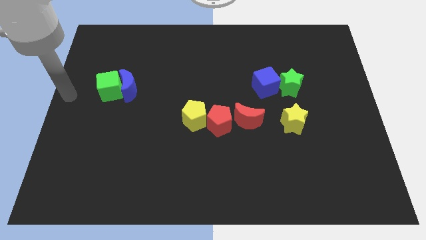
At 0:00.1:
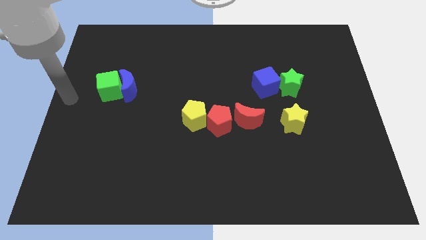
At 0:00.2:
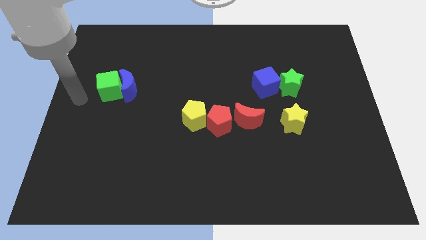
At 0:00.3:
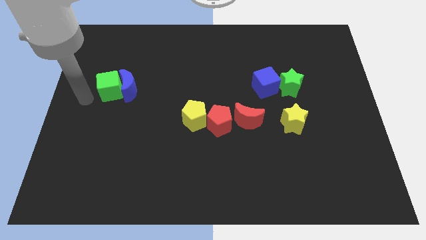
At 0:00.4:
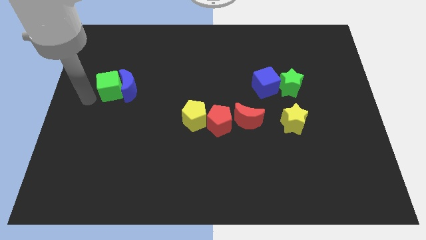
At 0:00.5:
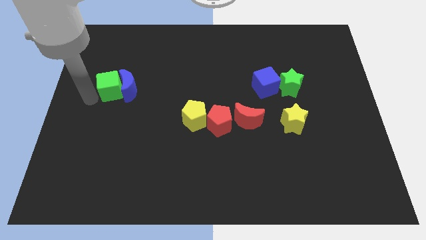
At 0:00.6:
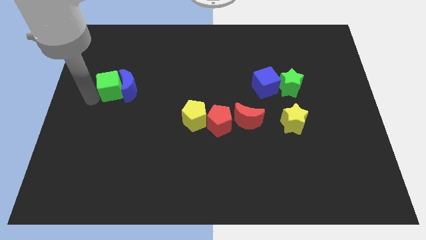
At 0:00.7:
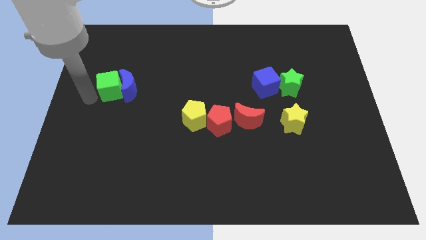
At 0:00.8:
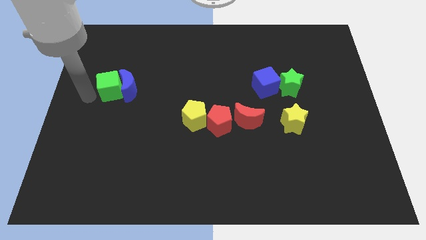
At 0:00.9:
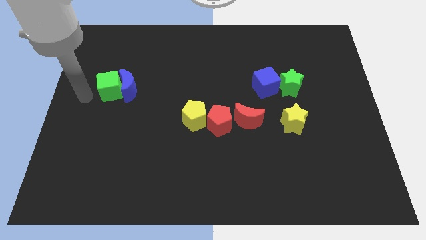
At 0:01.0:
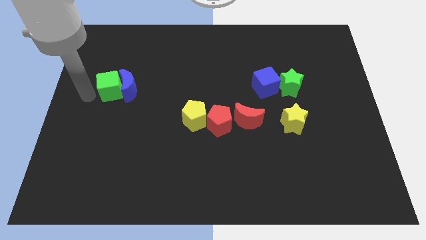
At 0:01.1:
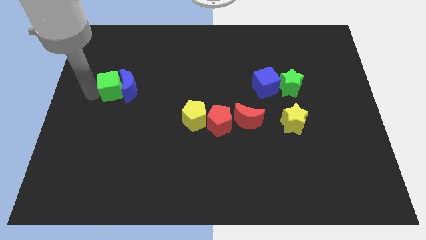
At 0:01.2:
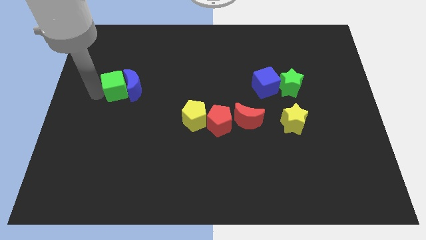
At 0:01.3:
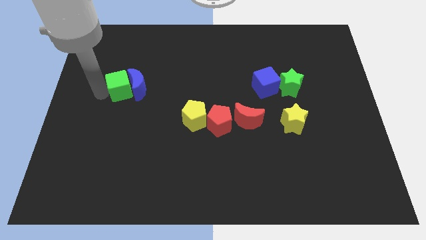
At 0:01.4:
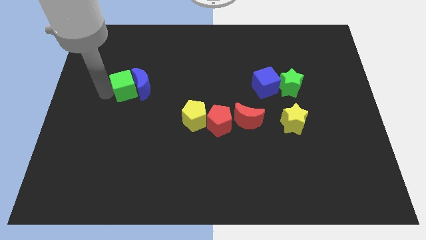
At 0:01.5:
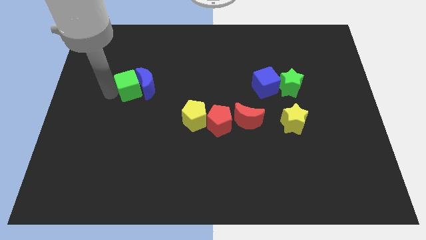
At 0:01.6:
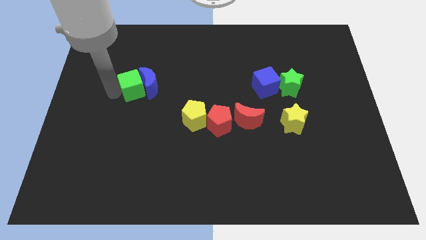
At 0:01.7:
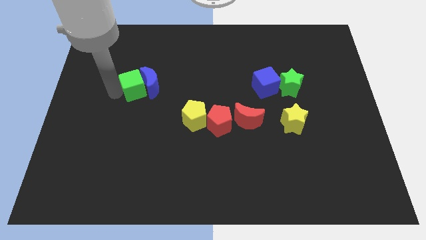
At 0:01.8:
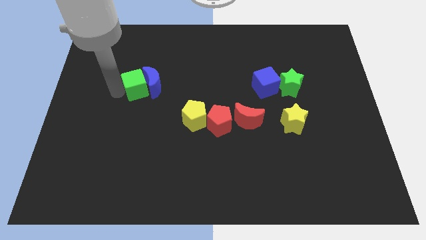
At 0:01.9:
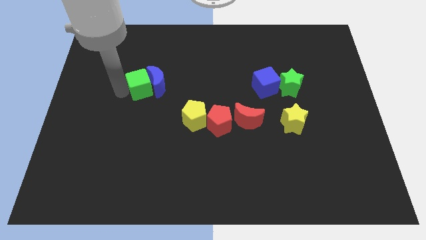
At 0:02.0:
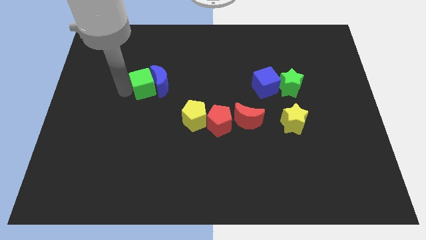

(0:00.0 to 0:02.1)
move the green cube and blue moon towards the right

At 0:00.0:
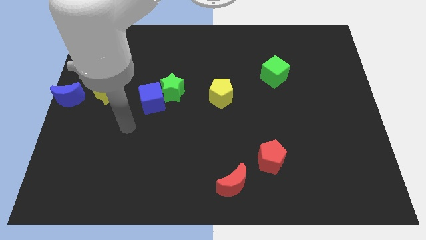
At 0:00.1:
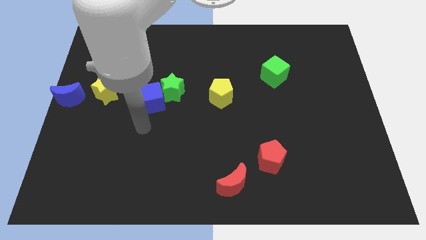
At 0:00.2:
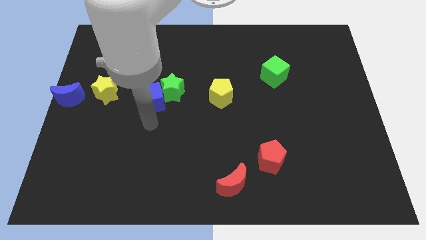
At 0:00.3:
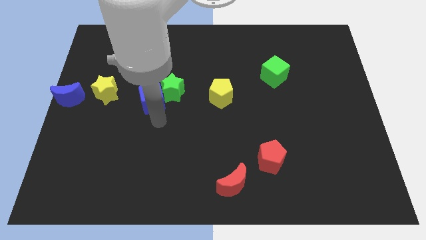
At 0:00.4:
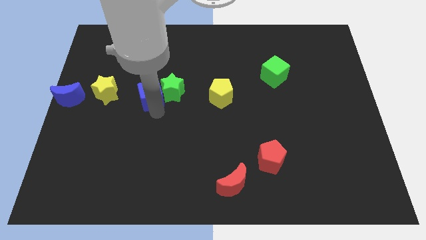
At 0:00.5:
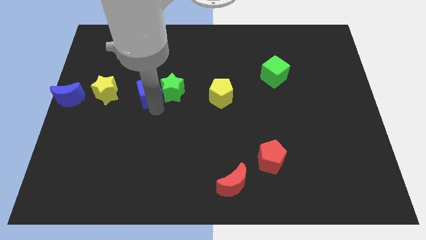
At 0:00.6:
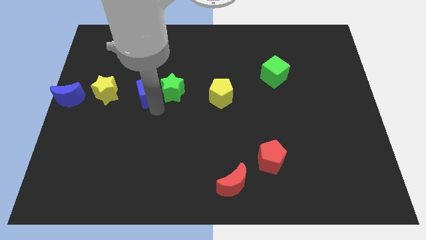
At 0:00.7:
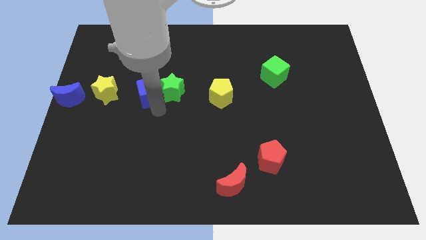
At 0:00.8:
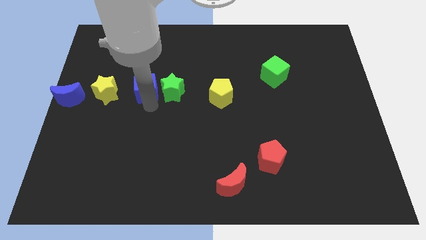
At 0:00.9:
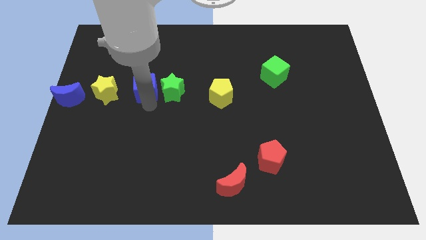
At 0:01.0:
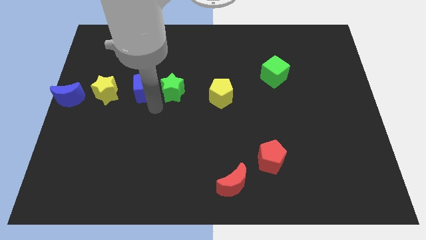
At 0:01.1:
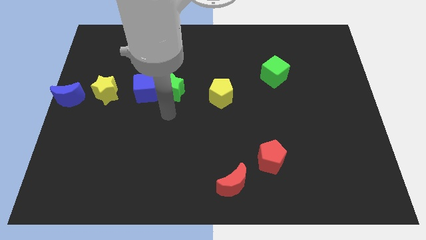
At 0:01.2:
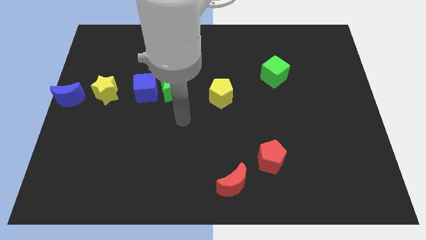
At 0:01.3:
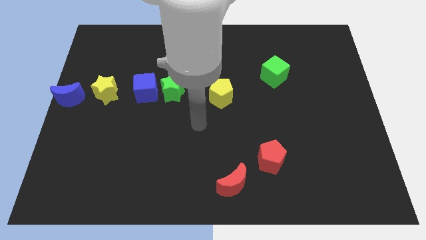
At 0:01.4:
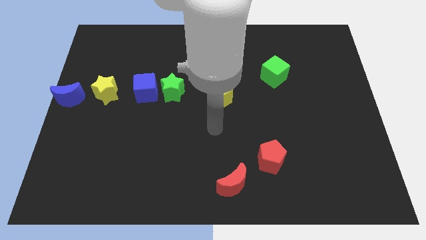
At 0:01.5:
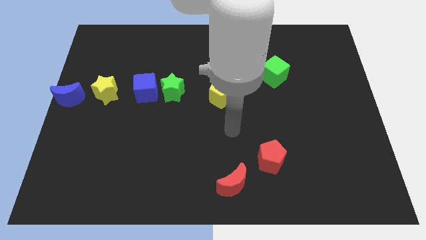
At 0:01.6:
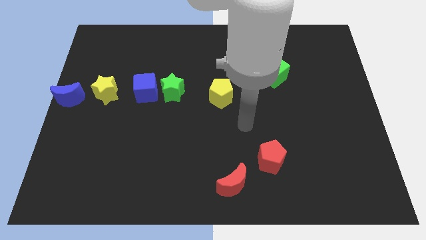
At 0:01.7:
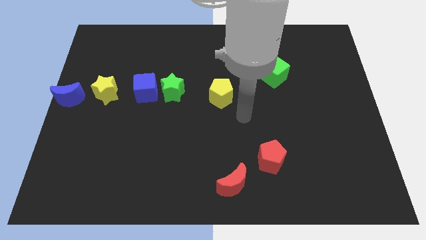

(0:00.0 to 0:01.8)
place blue cube in between yellow star and green star

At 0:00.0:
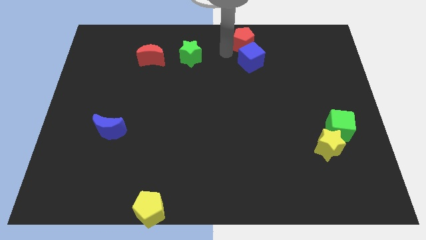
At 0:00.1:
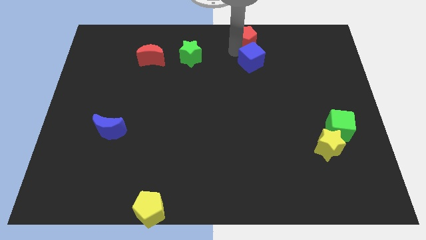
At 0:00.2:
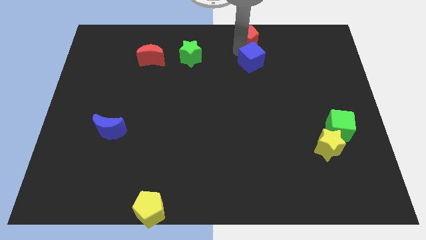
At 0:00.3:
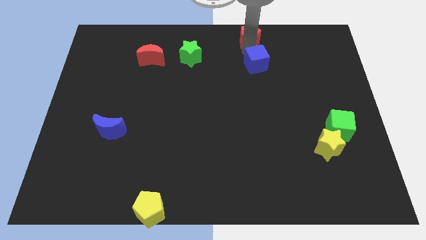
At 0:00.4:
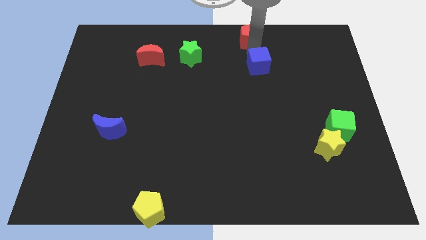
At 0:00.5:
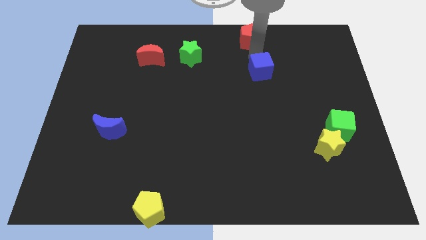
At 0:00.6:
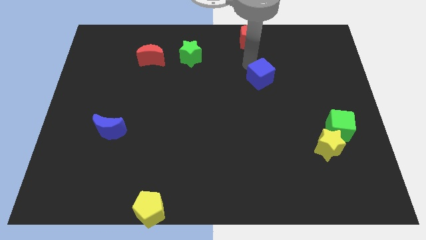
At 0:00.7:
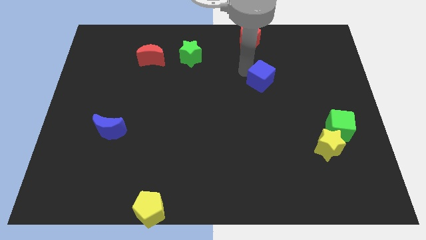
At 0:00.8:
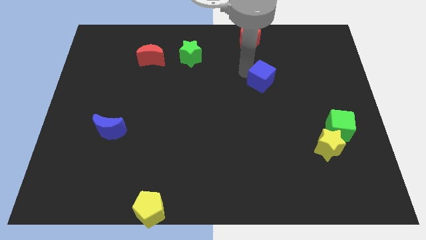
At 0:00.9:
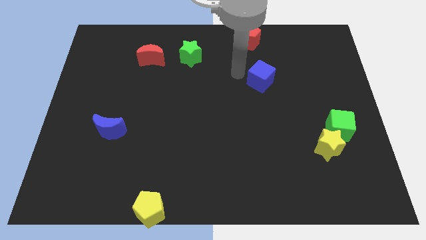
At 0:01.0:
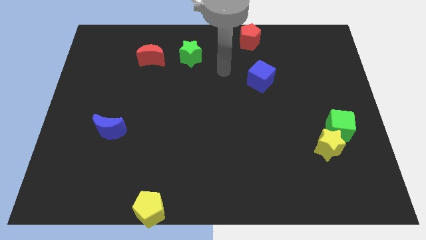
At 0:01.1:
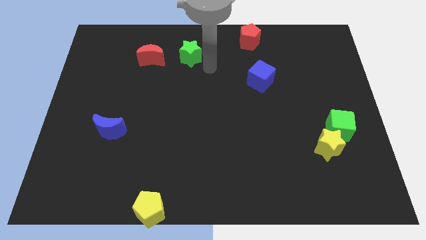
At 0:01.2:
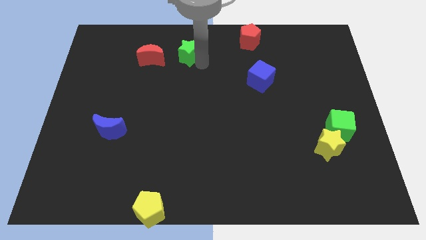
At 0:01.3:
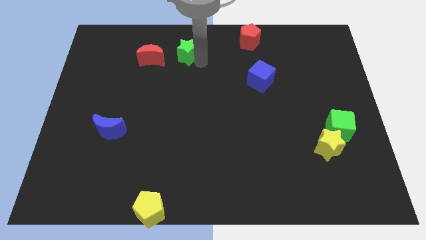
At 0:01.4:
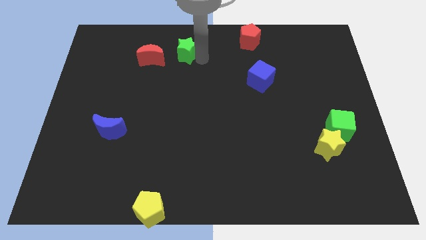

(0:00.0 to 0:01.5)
separate the red pentagon and blue cube

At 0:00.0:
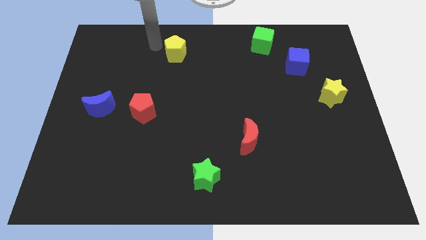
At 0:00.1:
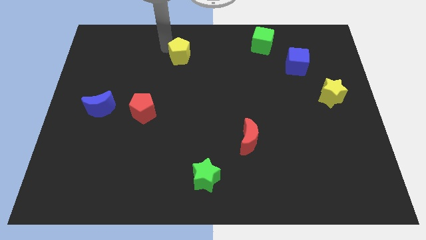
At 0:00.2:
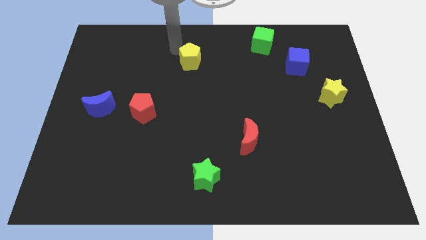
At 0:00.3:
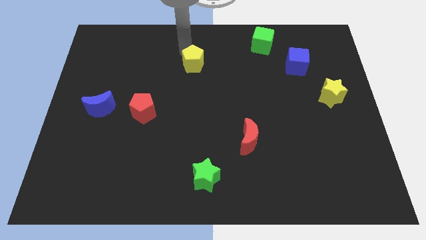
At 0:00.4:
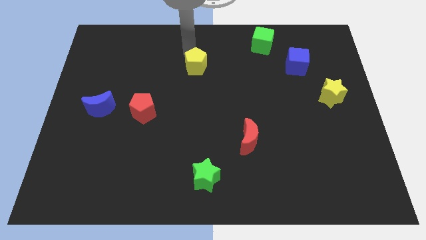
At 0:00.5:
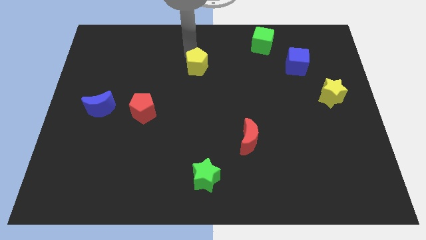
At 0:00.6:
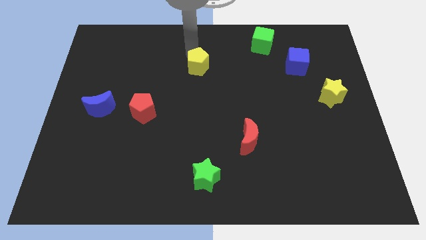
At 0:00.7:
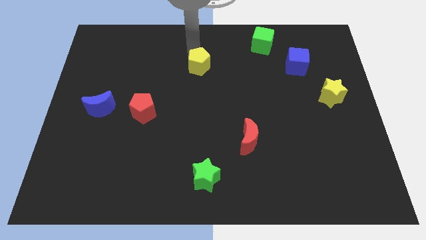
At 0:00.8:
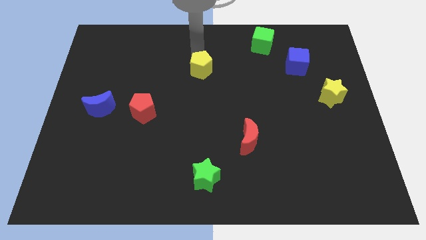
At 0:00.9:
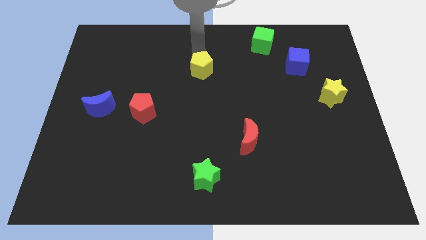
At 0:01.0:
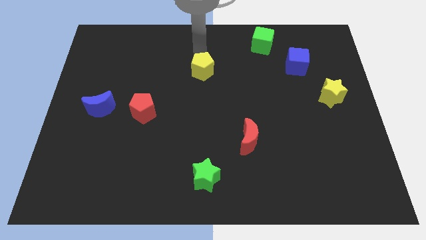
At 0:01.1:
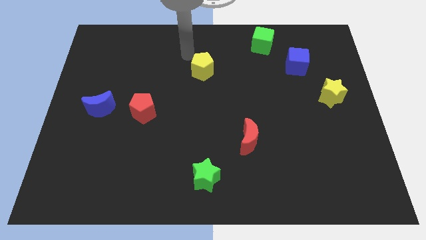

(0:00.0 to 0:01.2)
slightly push the yellow pentagon towards the centre of the board

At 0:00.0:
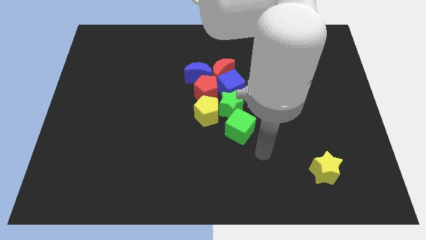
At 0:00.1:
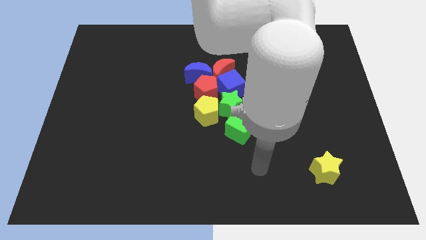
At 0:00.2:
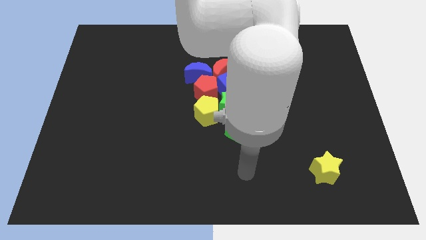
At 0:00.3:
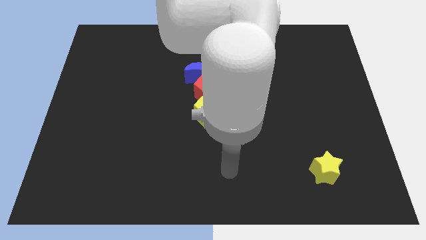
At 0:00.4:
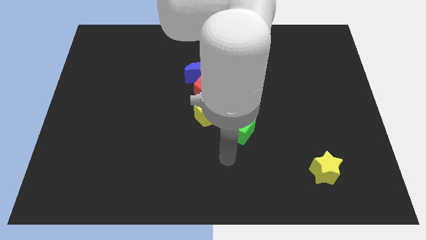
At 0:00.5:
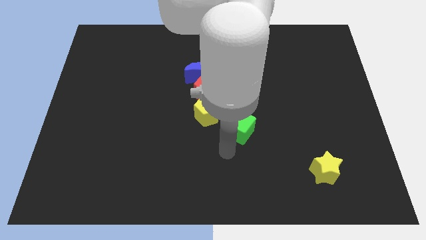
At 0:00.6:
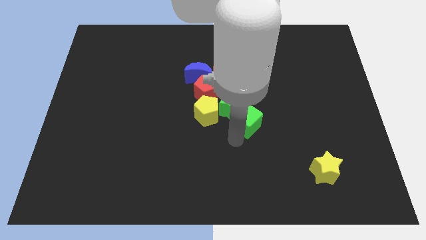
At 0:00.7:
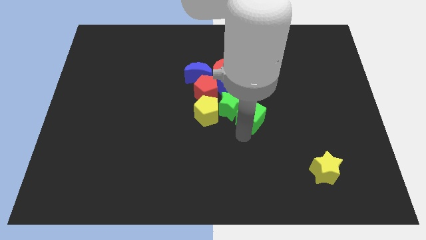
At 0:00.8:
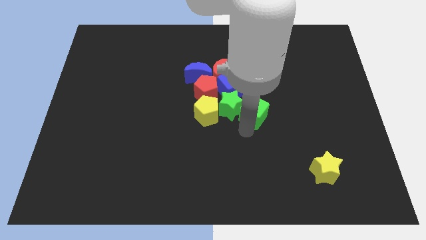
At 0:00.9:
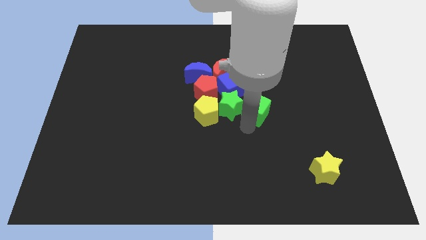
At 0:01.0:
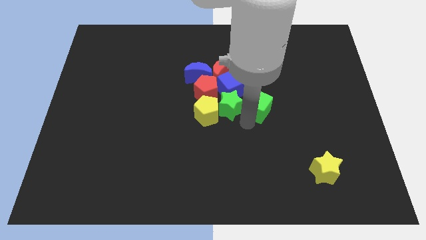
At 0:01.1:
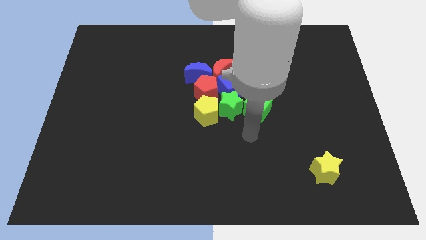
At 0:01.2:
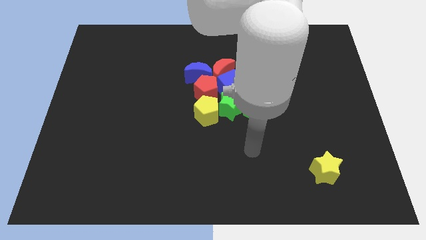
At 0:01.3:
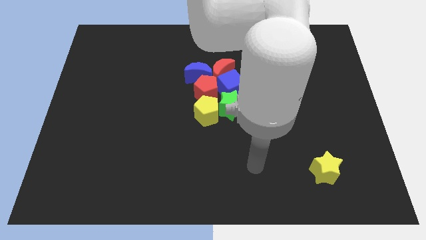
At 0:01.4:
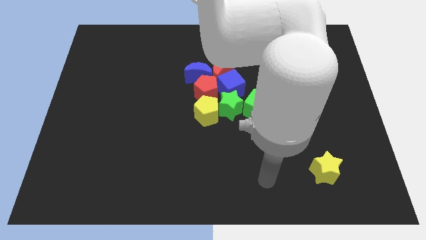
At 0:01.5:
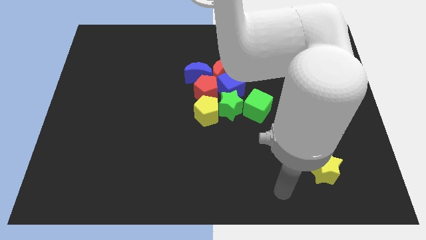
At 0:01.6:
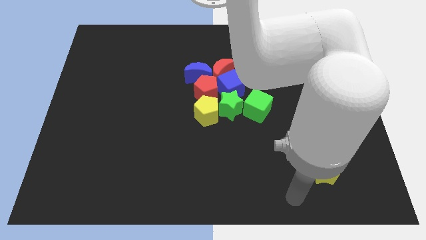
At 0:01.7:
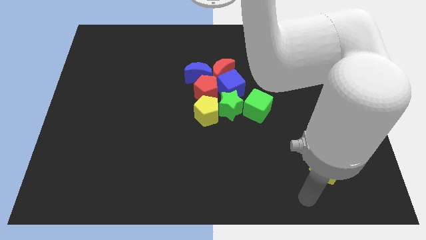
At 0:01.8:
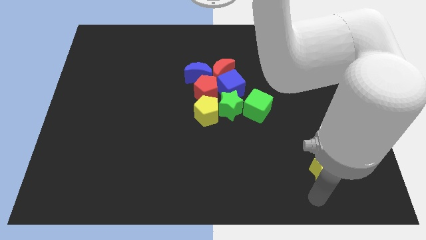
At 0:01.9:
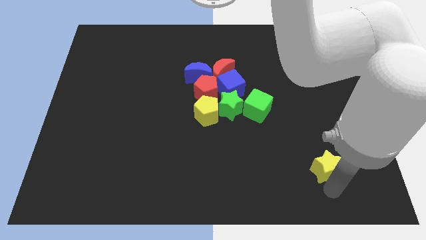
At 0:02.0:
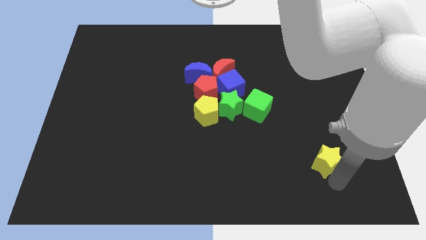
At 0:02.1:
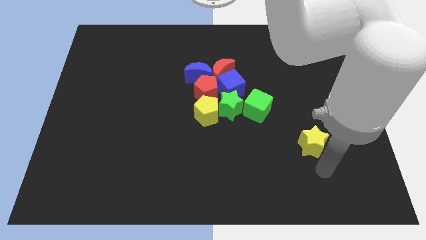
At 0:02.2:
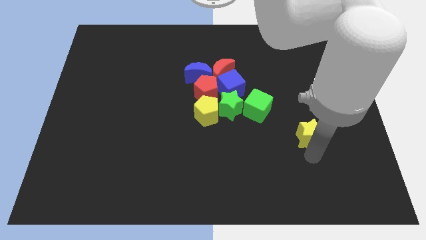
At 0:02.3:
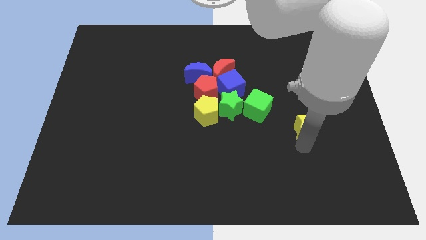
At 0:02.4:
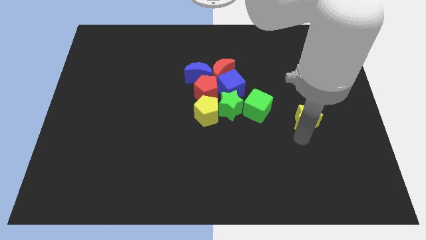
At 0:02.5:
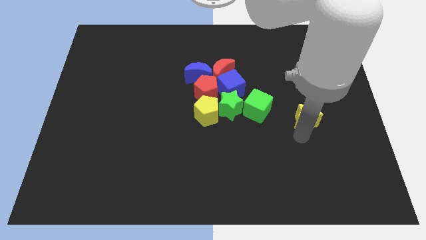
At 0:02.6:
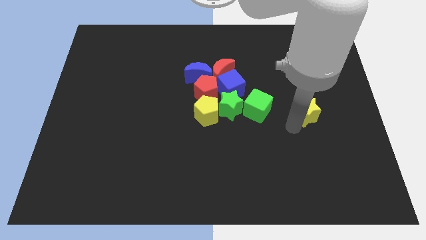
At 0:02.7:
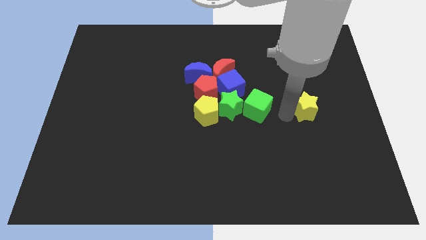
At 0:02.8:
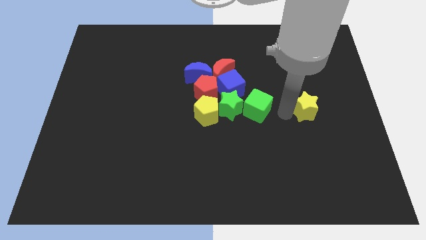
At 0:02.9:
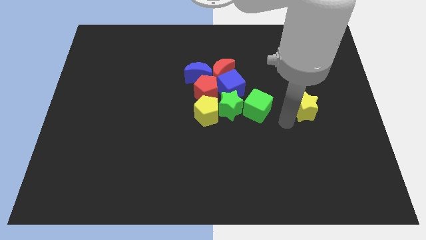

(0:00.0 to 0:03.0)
move the yellow star to the right of the green cube
